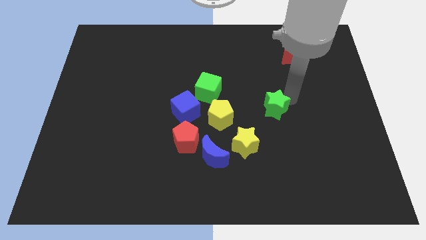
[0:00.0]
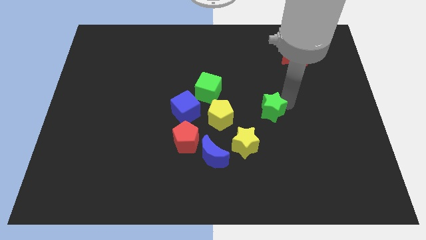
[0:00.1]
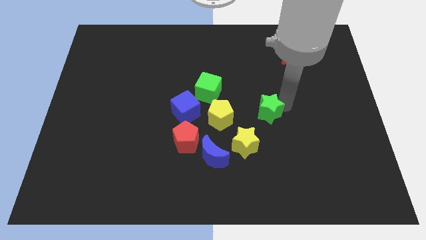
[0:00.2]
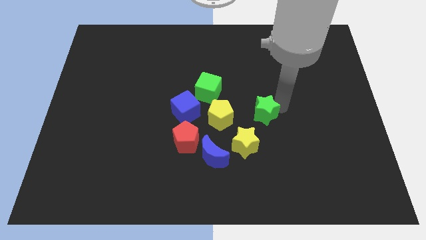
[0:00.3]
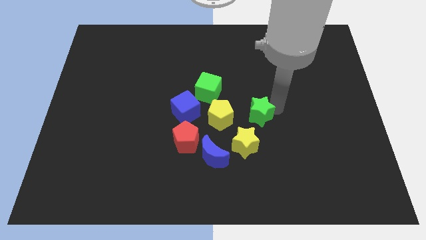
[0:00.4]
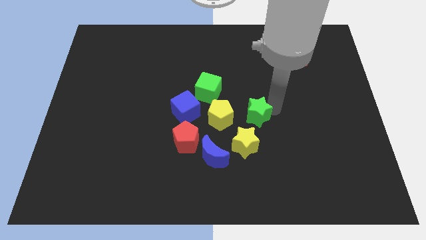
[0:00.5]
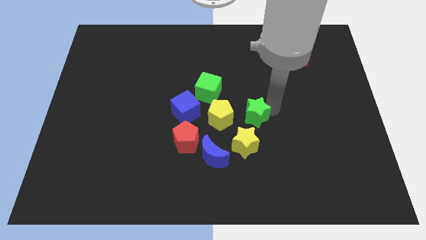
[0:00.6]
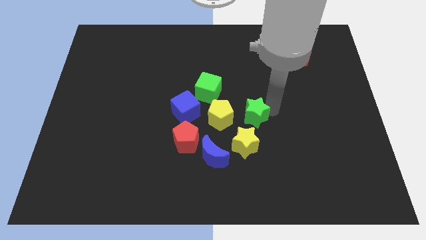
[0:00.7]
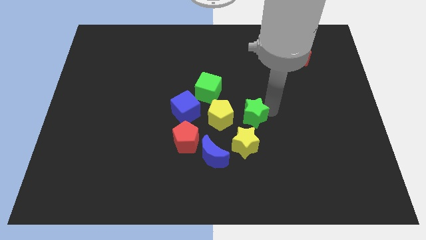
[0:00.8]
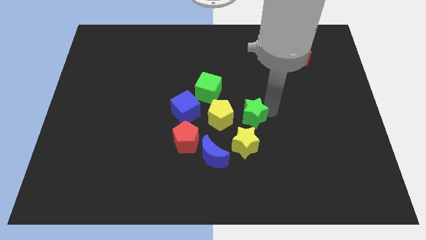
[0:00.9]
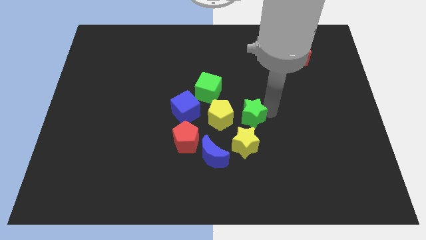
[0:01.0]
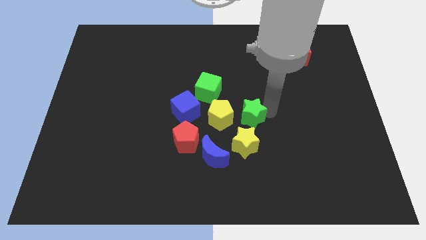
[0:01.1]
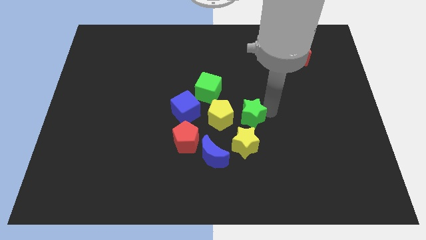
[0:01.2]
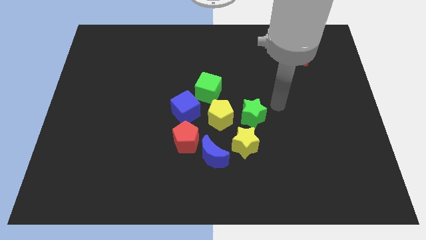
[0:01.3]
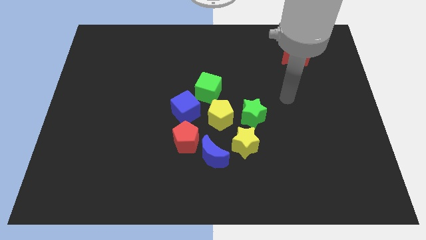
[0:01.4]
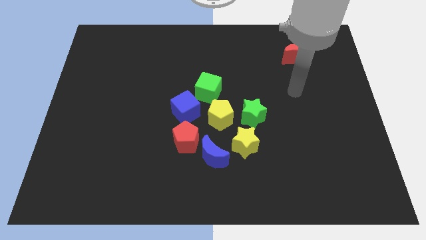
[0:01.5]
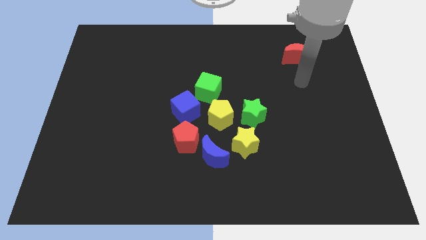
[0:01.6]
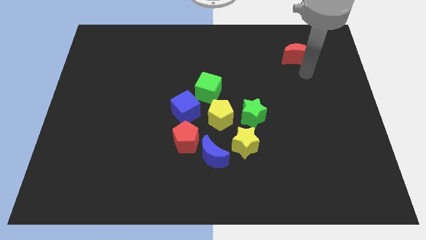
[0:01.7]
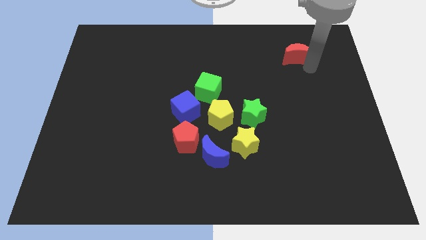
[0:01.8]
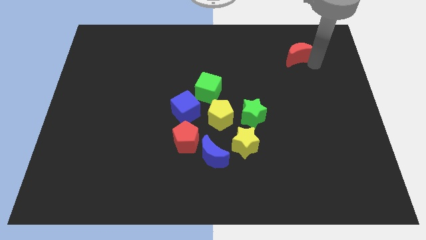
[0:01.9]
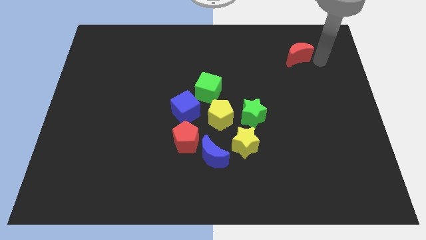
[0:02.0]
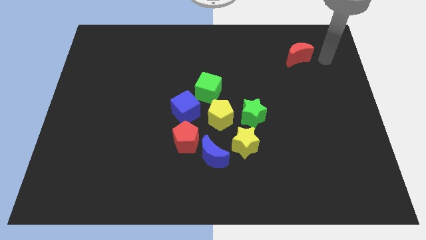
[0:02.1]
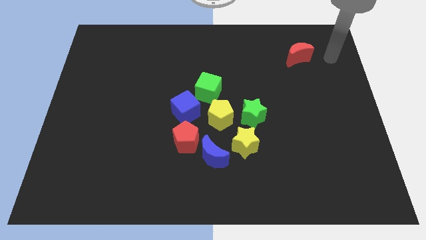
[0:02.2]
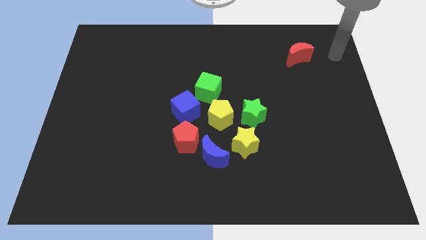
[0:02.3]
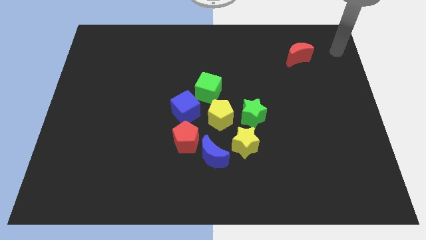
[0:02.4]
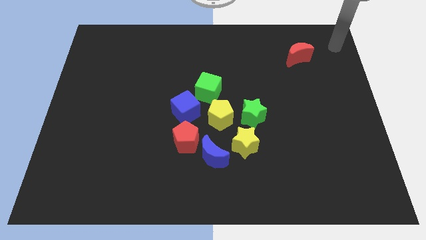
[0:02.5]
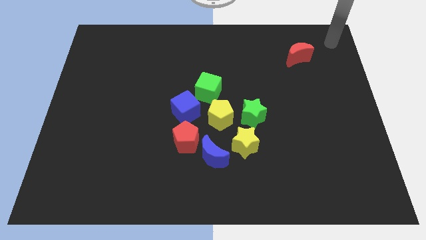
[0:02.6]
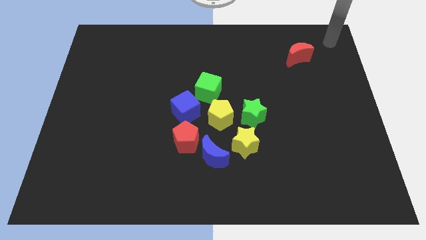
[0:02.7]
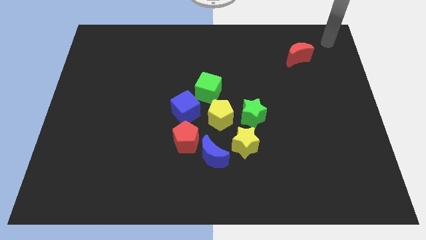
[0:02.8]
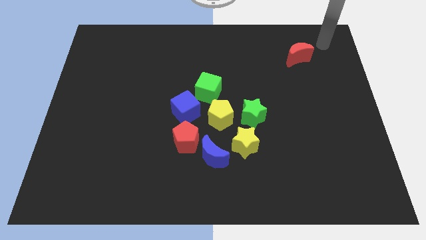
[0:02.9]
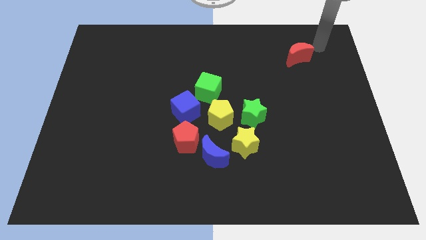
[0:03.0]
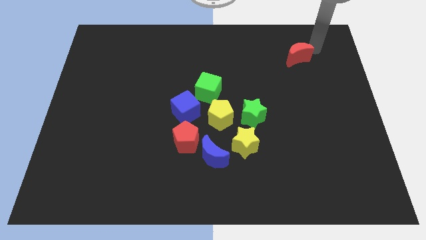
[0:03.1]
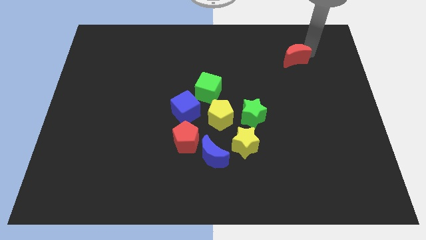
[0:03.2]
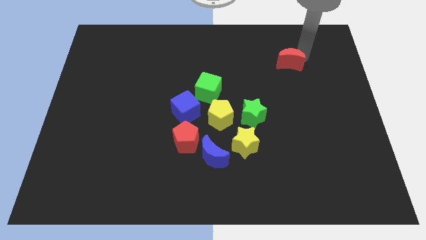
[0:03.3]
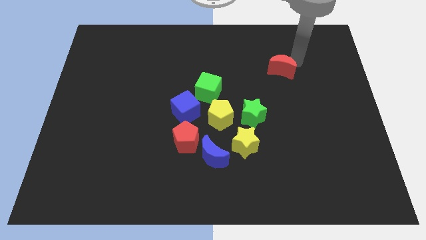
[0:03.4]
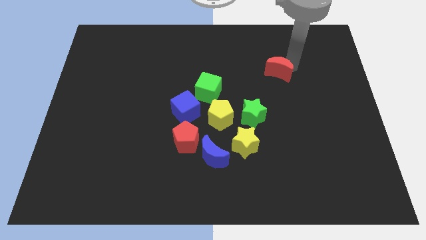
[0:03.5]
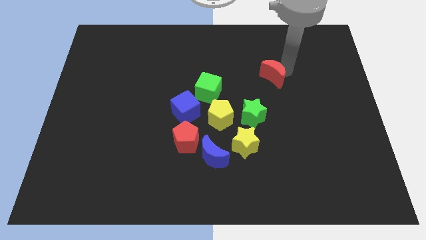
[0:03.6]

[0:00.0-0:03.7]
move the red moon towards the group of blocks

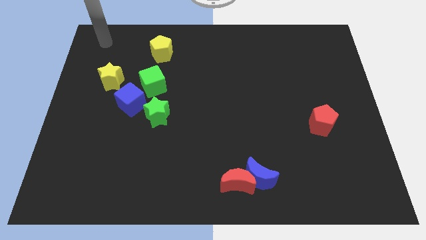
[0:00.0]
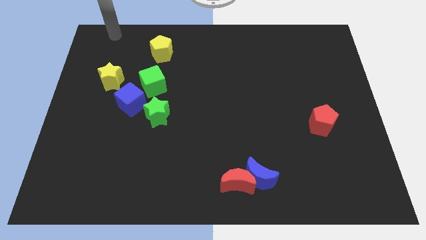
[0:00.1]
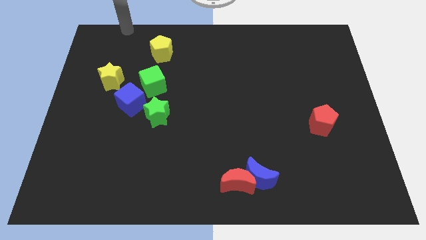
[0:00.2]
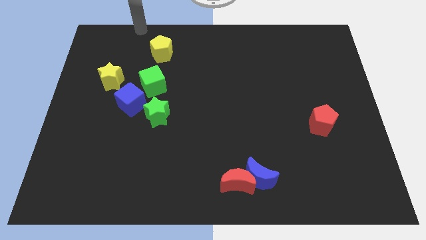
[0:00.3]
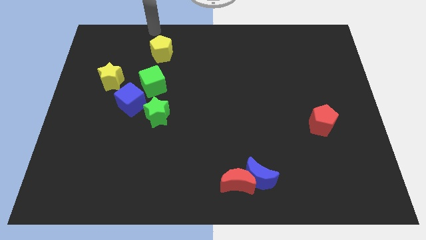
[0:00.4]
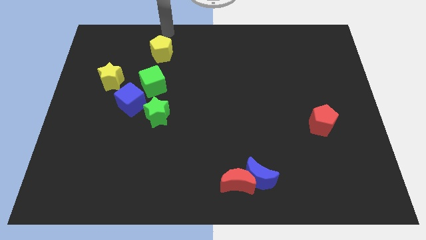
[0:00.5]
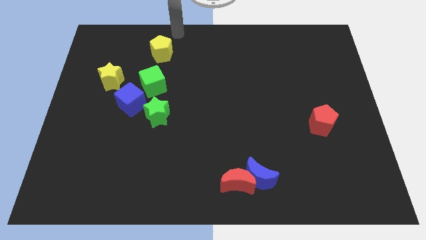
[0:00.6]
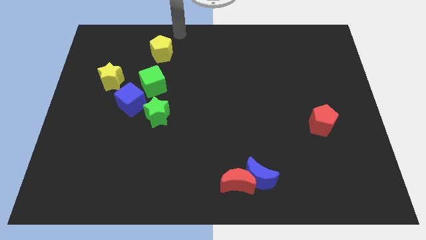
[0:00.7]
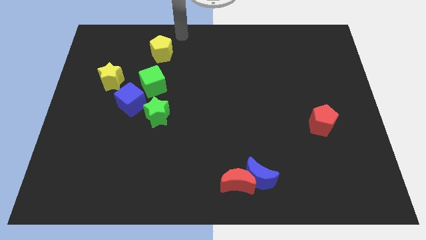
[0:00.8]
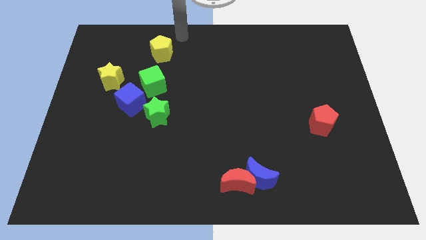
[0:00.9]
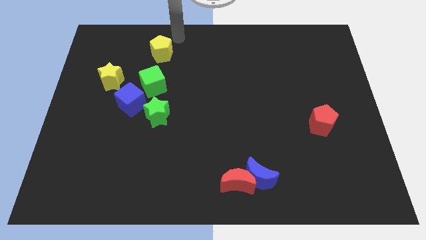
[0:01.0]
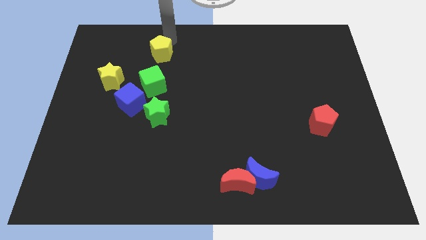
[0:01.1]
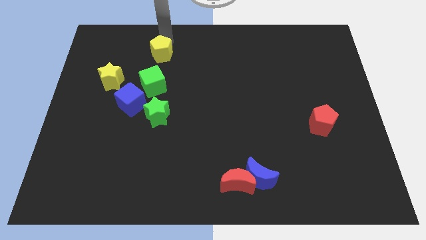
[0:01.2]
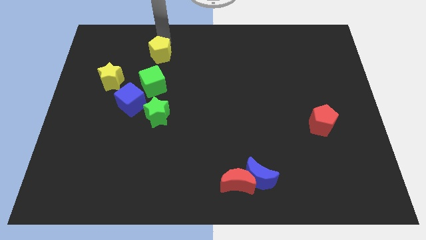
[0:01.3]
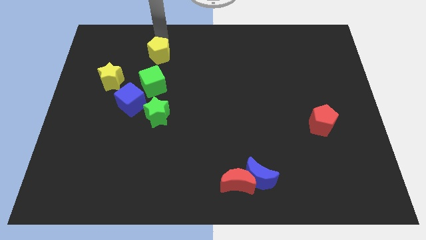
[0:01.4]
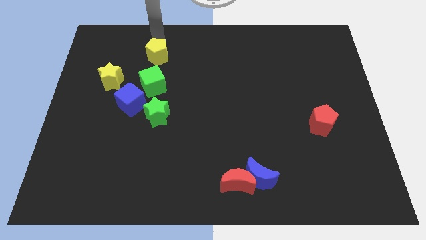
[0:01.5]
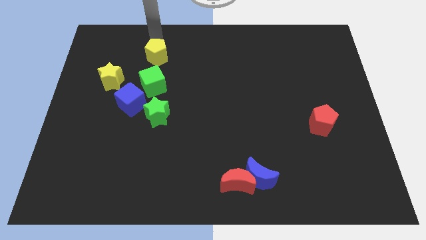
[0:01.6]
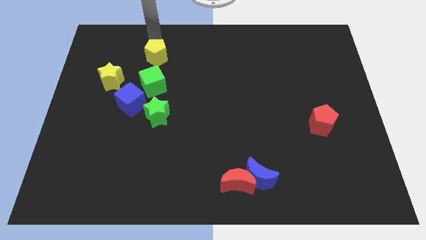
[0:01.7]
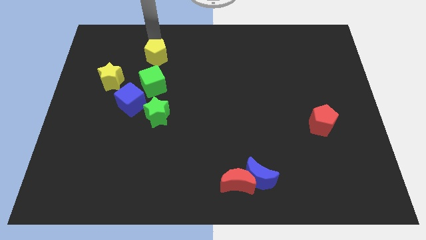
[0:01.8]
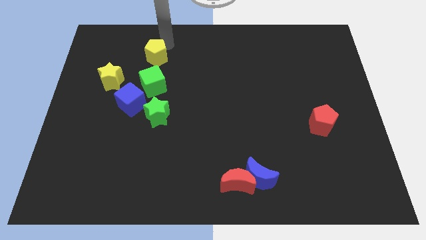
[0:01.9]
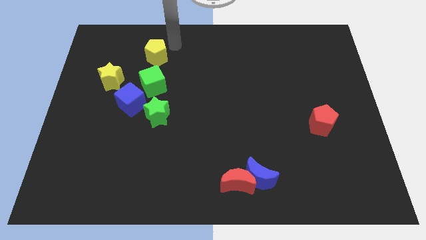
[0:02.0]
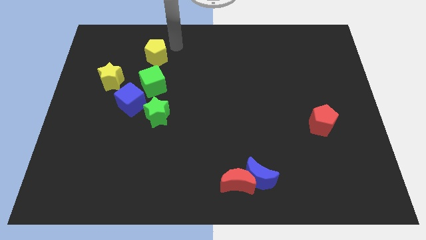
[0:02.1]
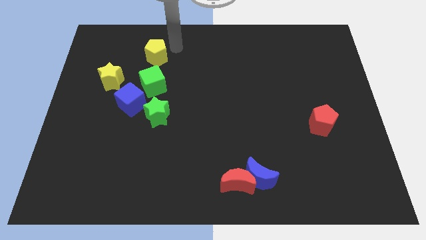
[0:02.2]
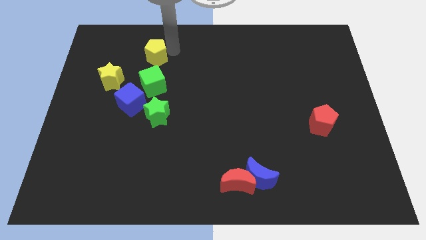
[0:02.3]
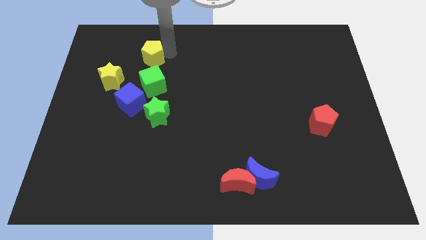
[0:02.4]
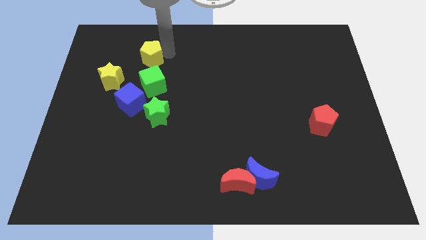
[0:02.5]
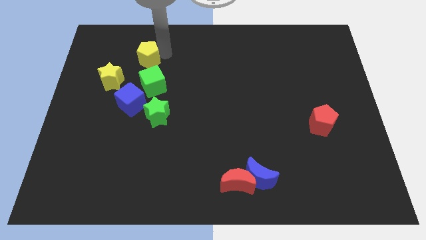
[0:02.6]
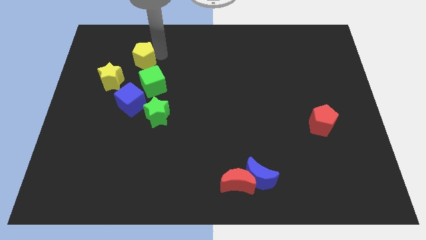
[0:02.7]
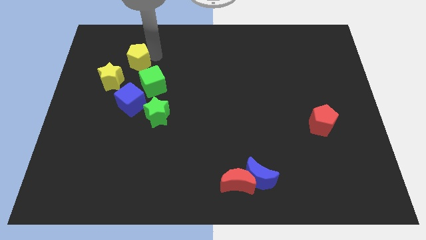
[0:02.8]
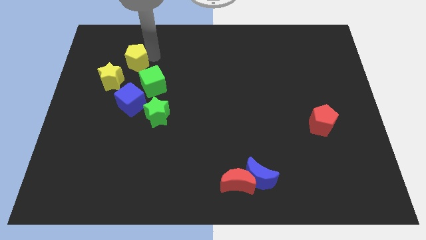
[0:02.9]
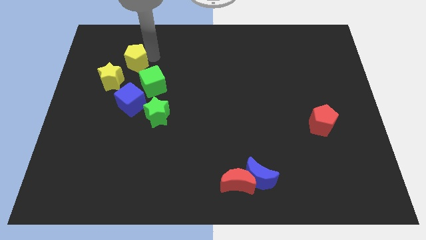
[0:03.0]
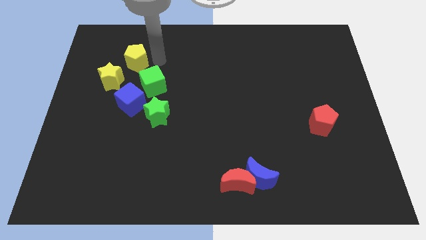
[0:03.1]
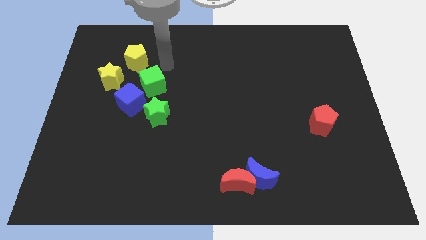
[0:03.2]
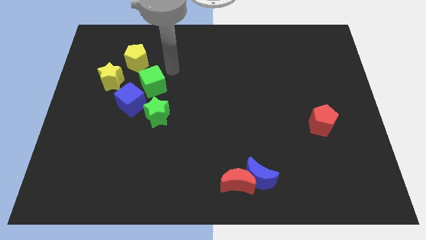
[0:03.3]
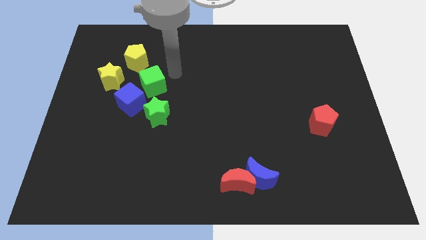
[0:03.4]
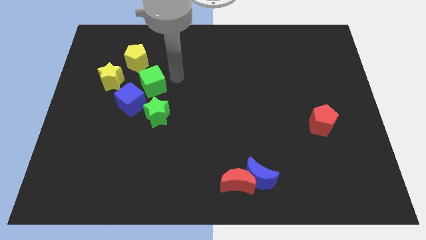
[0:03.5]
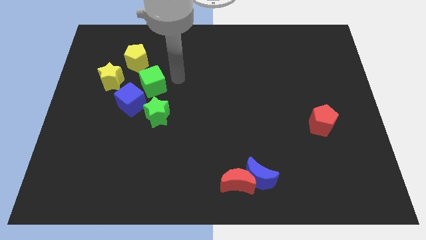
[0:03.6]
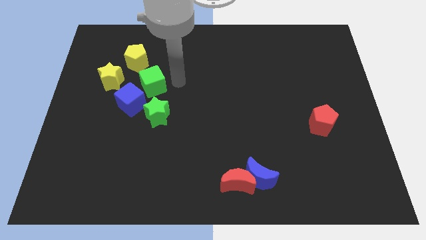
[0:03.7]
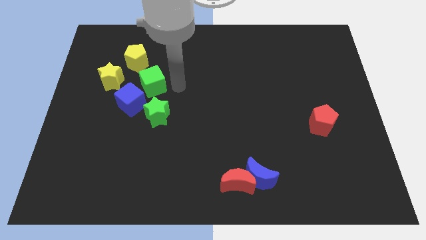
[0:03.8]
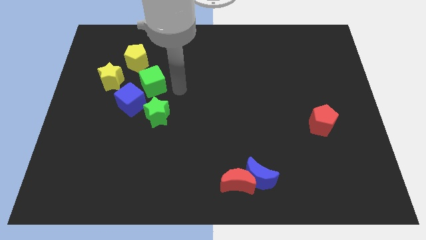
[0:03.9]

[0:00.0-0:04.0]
place yellow pentagon near the green cube and yellow star

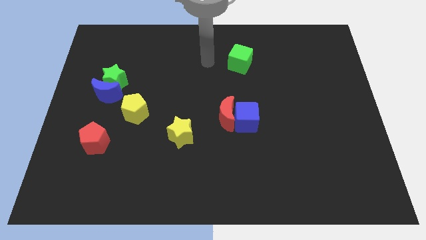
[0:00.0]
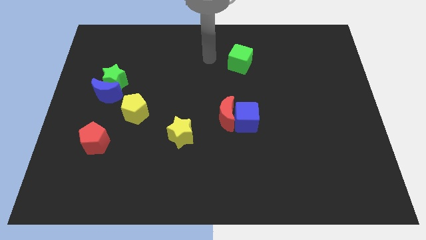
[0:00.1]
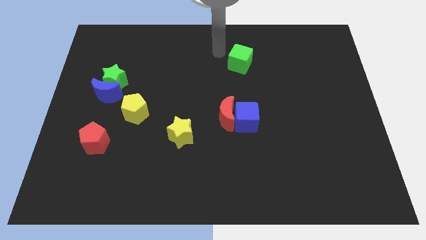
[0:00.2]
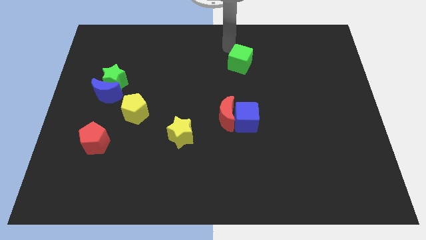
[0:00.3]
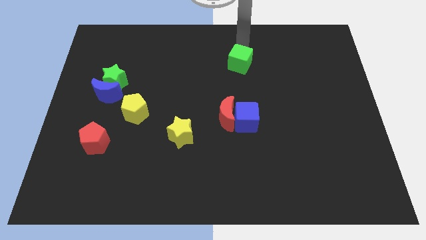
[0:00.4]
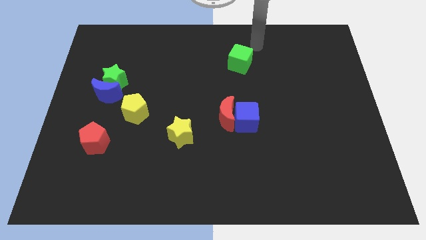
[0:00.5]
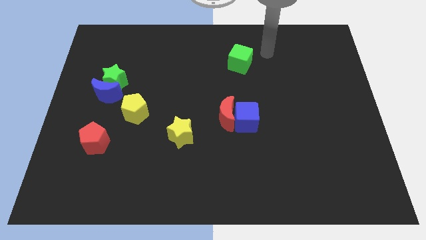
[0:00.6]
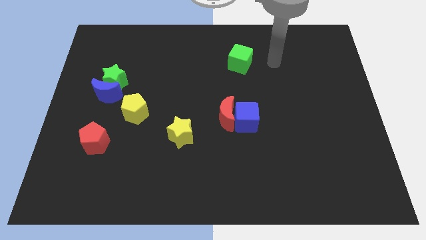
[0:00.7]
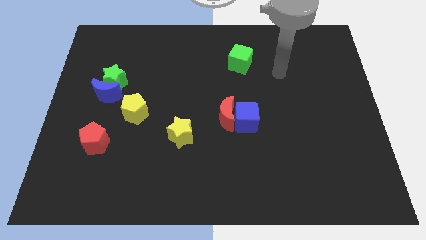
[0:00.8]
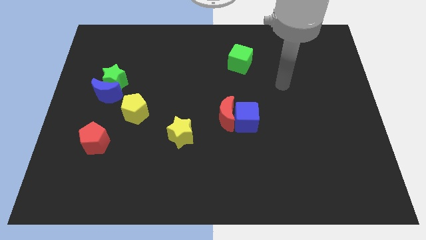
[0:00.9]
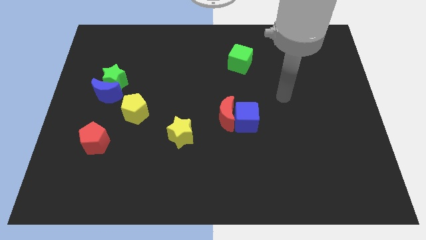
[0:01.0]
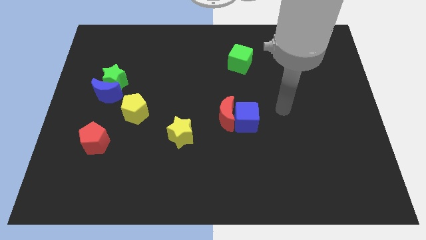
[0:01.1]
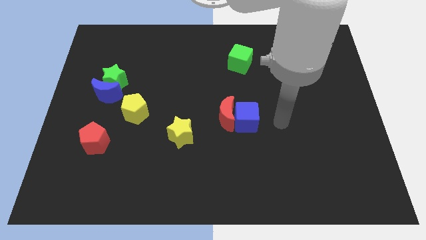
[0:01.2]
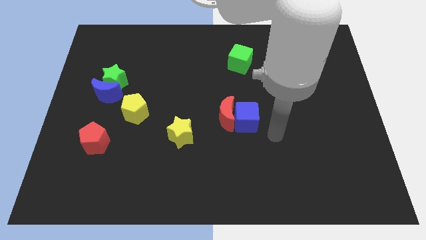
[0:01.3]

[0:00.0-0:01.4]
point the arm to the right of the blue cube
